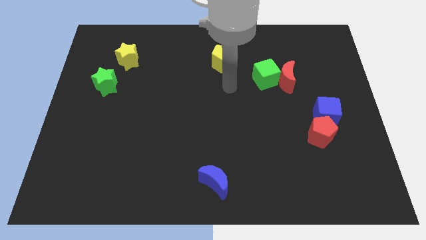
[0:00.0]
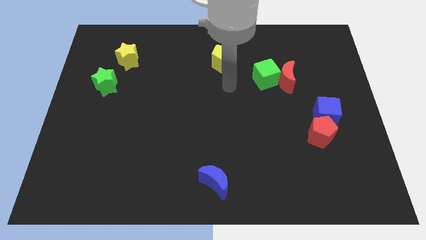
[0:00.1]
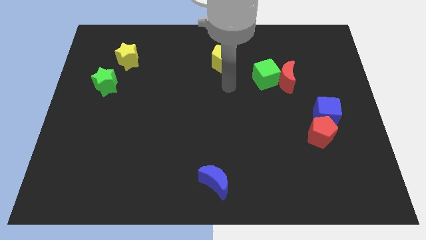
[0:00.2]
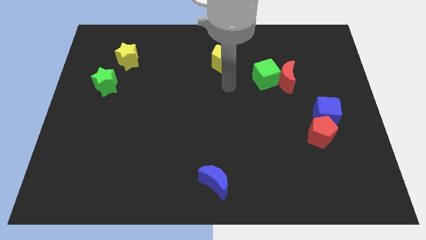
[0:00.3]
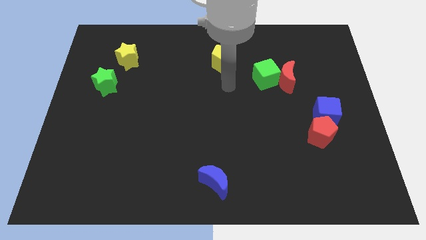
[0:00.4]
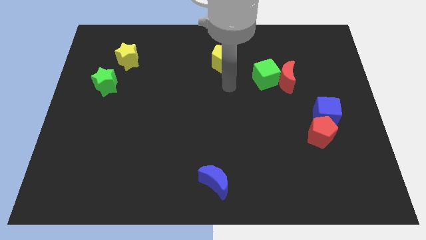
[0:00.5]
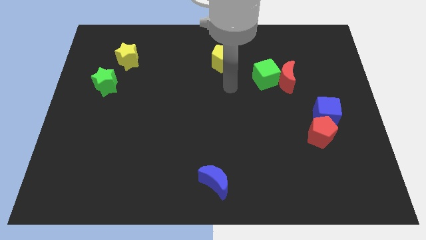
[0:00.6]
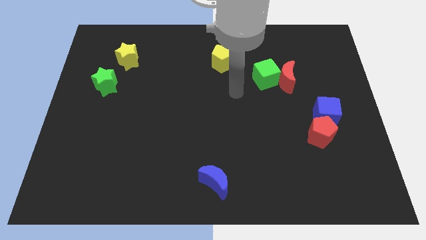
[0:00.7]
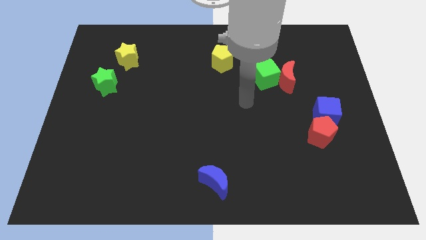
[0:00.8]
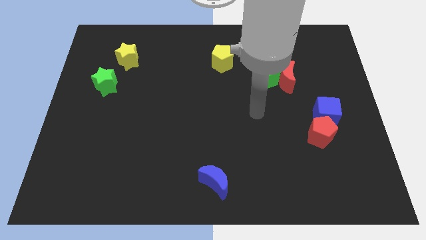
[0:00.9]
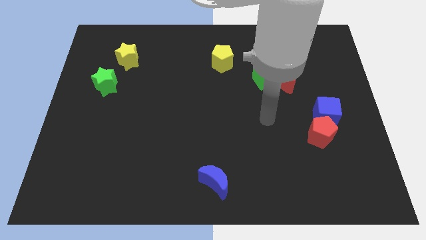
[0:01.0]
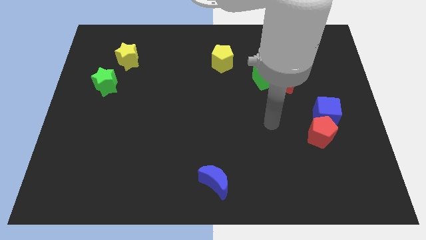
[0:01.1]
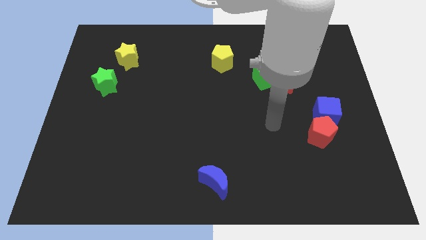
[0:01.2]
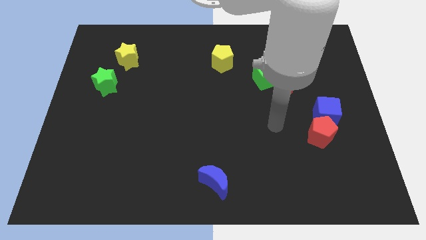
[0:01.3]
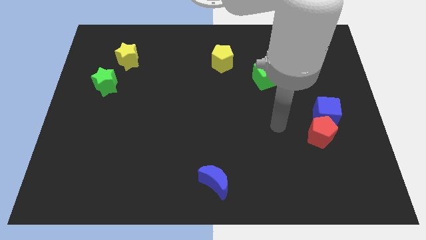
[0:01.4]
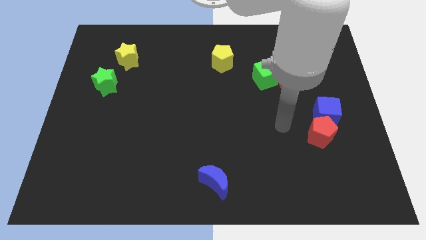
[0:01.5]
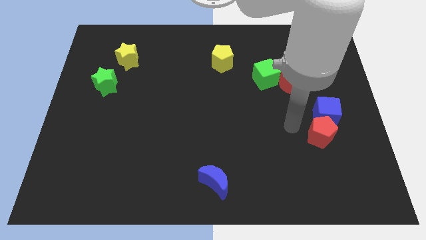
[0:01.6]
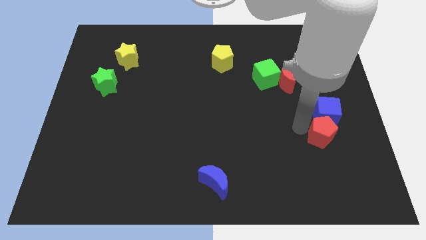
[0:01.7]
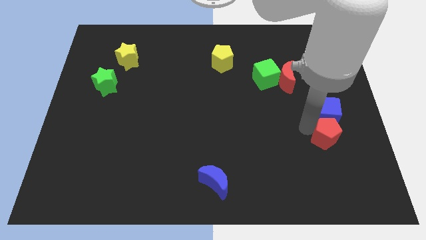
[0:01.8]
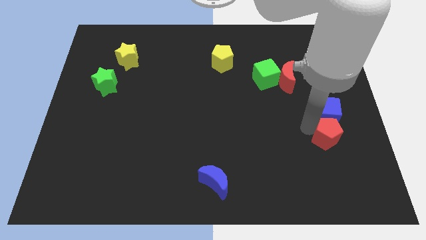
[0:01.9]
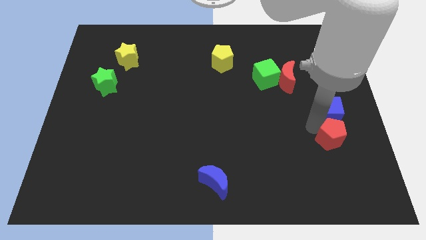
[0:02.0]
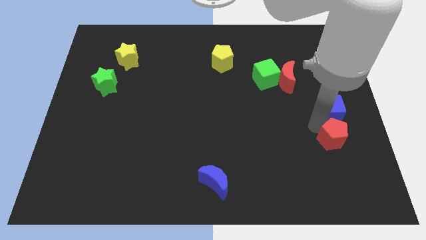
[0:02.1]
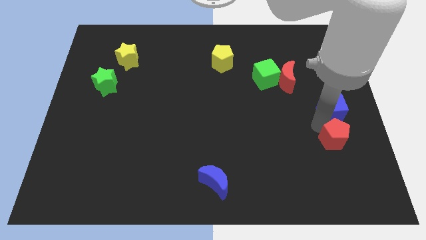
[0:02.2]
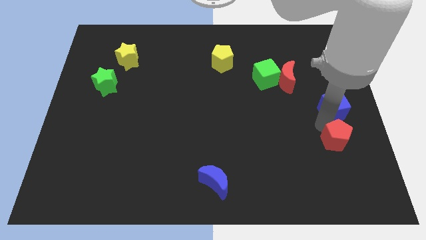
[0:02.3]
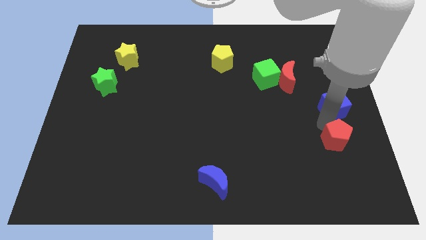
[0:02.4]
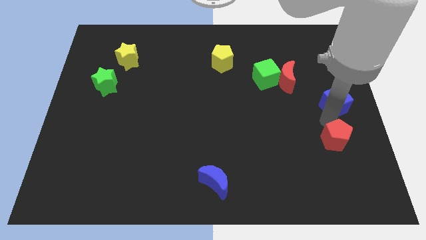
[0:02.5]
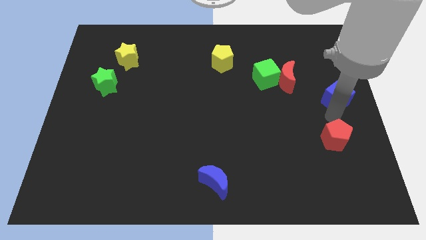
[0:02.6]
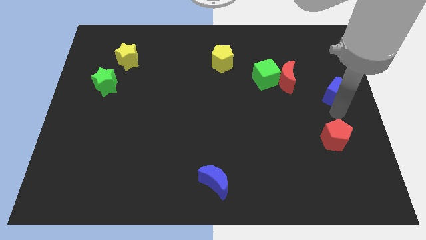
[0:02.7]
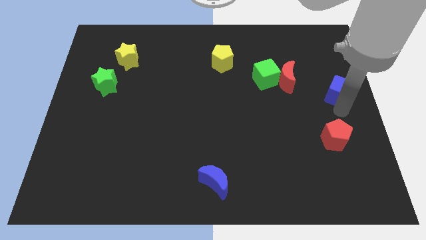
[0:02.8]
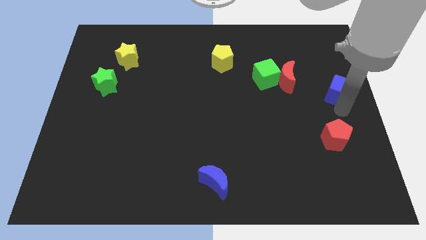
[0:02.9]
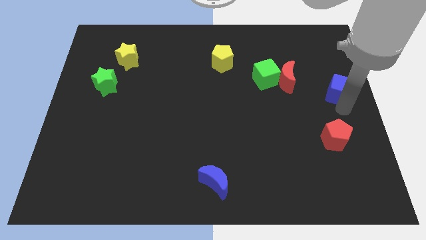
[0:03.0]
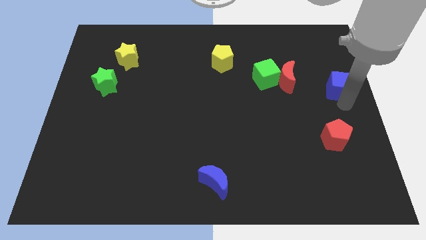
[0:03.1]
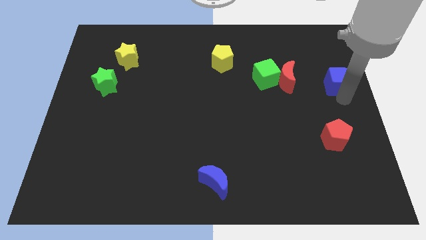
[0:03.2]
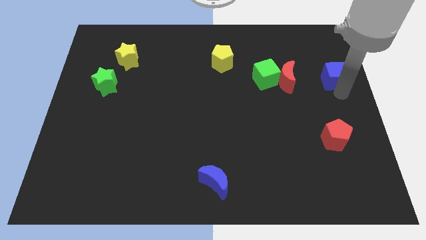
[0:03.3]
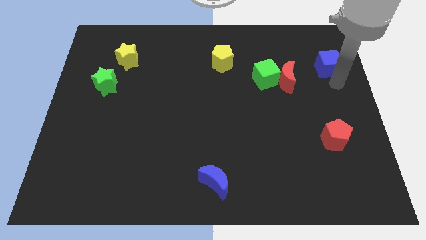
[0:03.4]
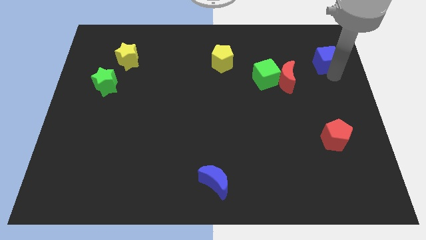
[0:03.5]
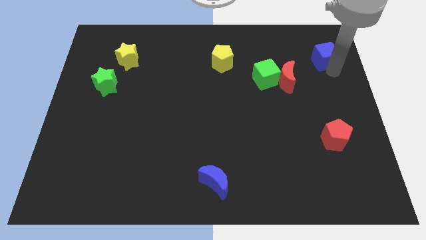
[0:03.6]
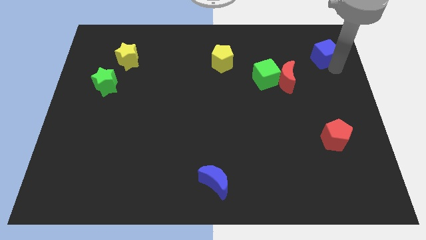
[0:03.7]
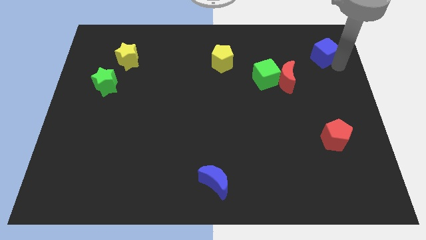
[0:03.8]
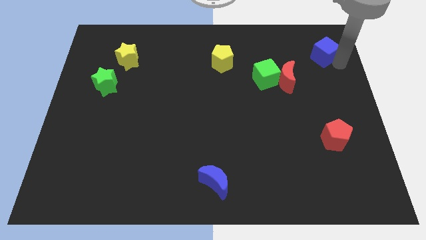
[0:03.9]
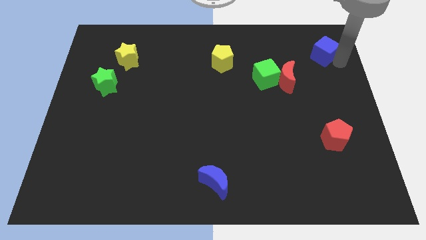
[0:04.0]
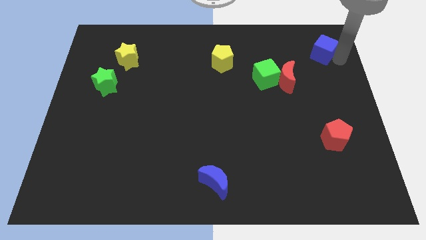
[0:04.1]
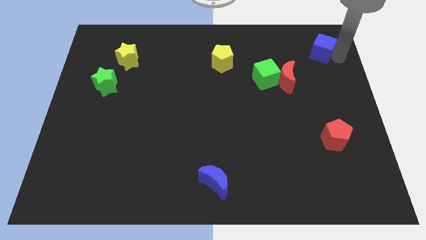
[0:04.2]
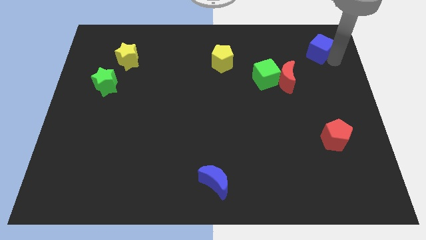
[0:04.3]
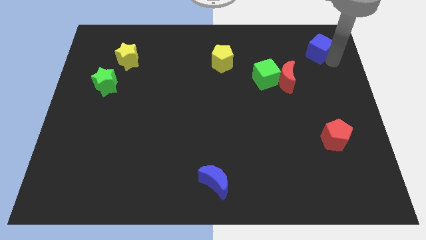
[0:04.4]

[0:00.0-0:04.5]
separate the blue cube from the red pentagon

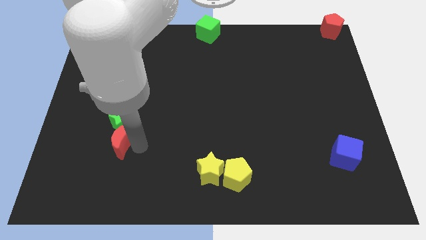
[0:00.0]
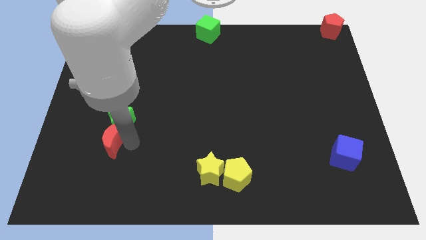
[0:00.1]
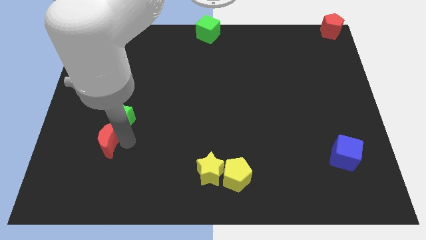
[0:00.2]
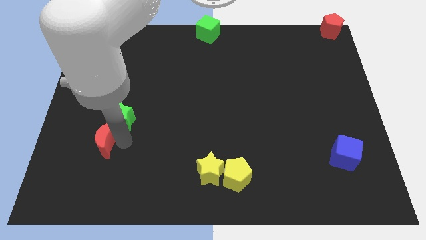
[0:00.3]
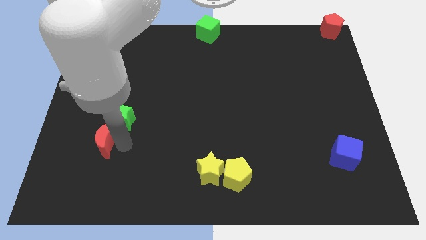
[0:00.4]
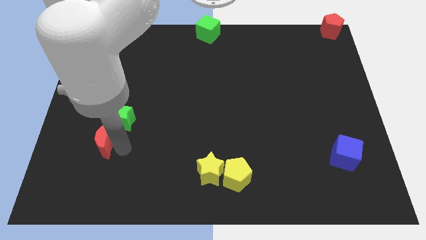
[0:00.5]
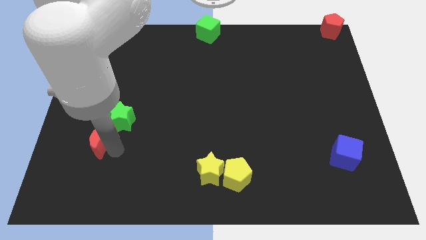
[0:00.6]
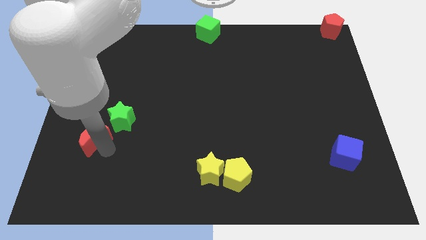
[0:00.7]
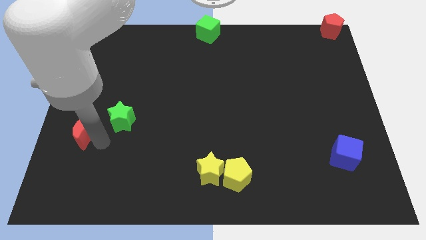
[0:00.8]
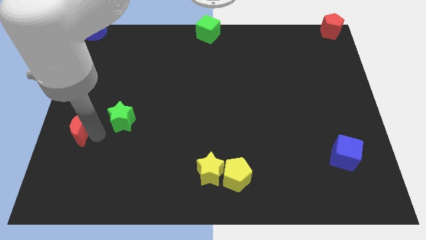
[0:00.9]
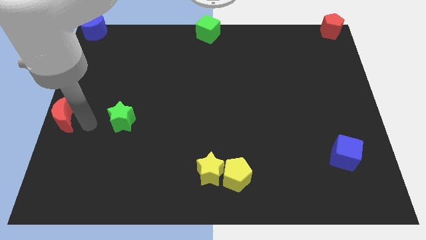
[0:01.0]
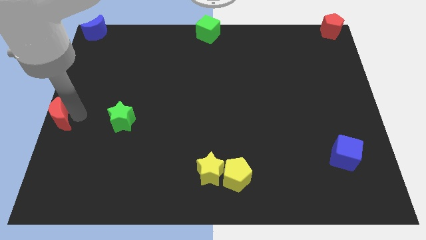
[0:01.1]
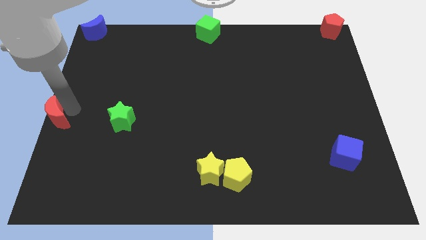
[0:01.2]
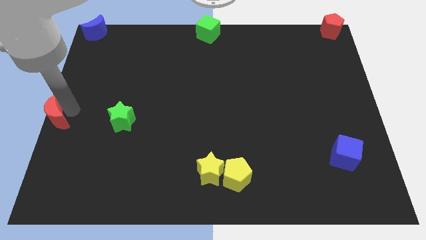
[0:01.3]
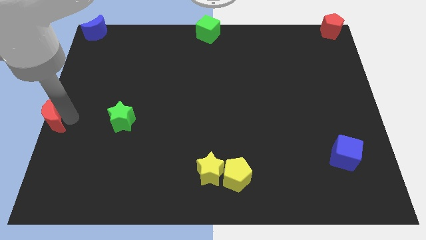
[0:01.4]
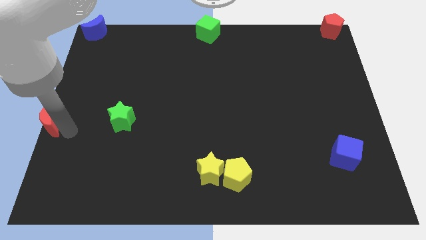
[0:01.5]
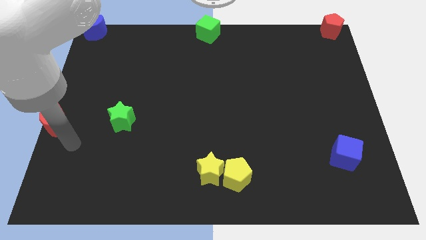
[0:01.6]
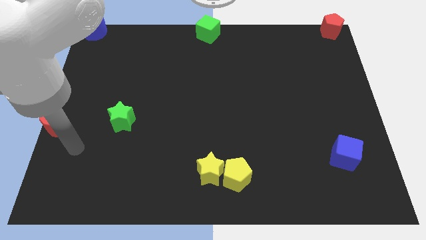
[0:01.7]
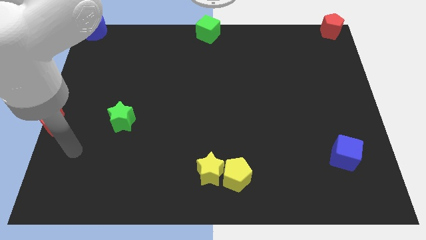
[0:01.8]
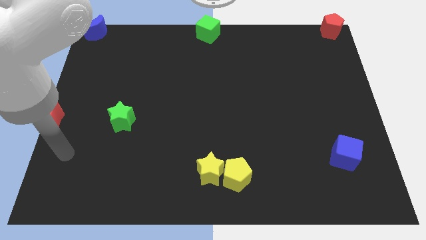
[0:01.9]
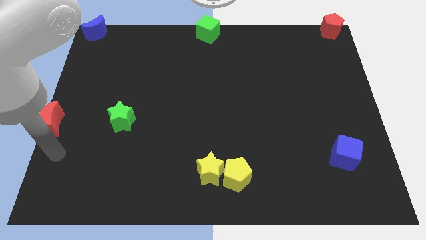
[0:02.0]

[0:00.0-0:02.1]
move the red moon parallel to the green star

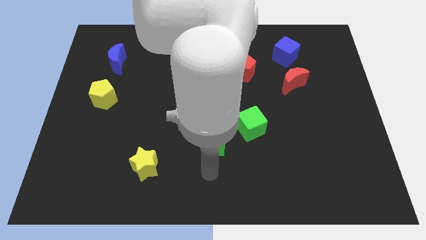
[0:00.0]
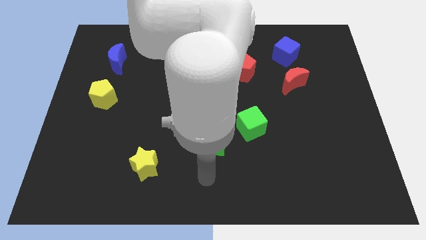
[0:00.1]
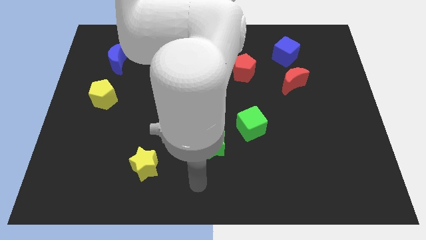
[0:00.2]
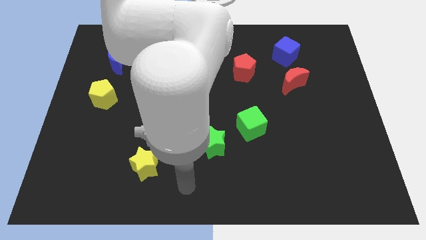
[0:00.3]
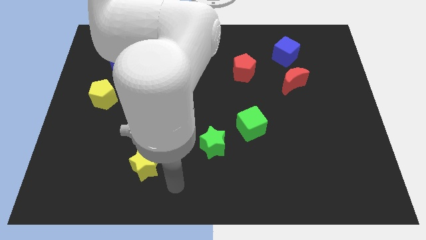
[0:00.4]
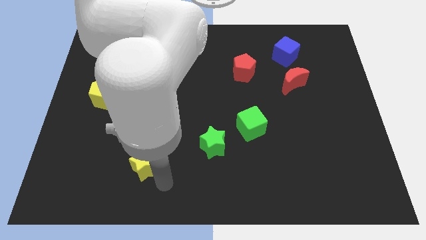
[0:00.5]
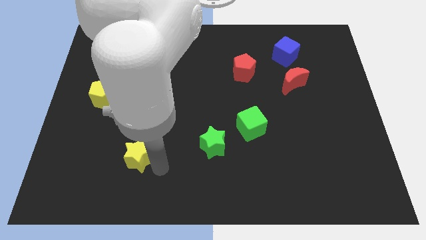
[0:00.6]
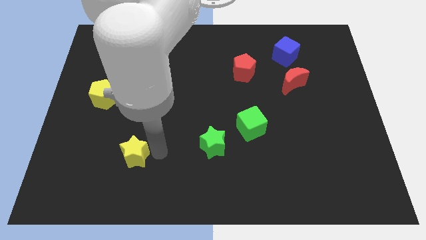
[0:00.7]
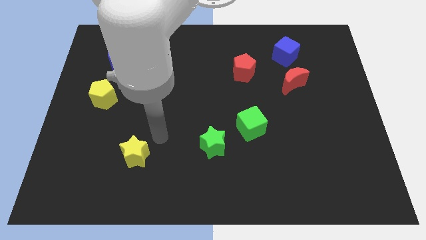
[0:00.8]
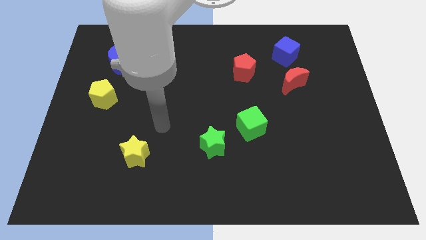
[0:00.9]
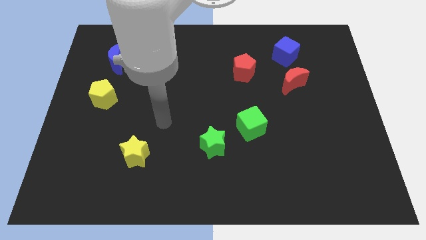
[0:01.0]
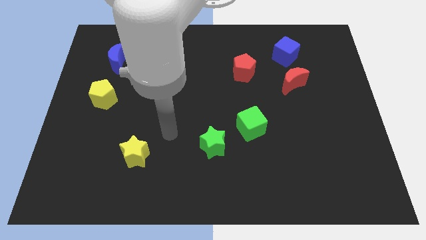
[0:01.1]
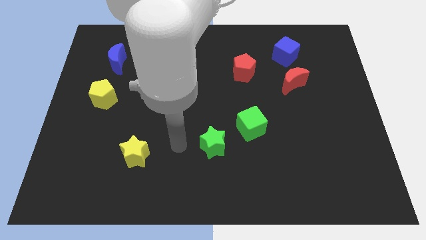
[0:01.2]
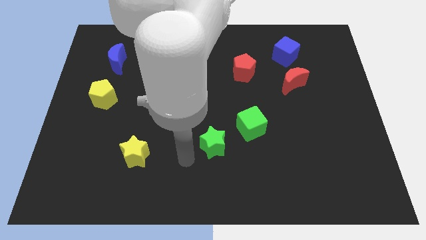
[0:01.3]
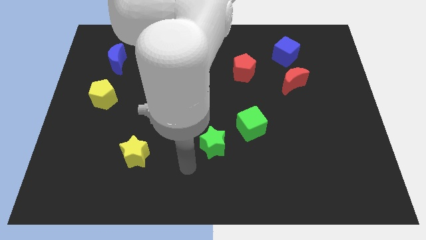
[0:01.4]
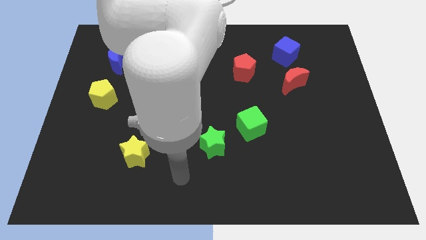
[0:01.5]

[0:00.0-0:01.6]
push the yellow star slightly to the top left side of the board

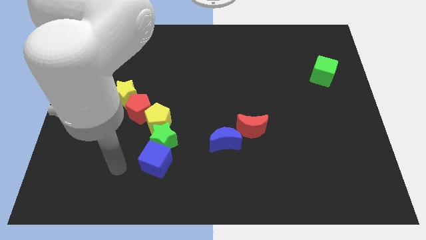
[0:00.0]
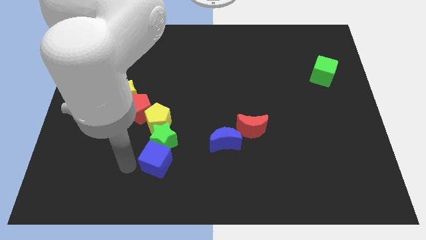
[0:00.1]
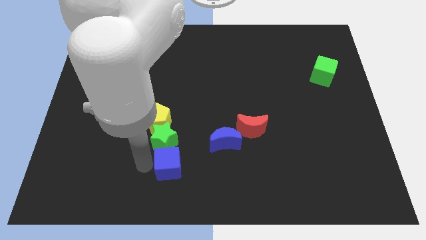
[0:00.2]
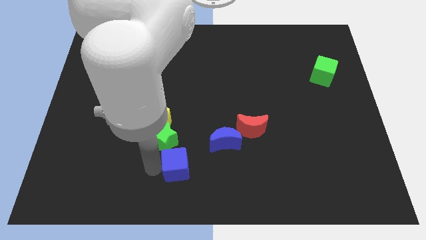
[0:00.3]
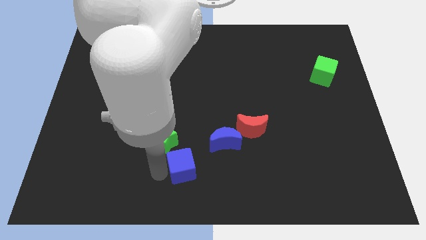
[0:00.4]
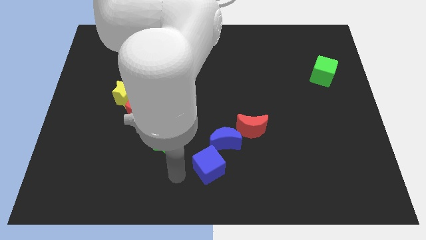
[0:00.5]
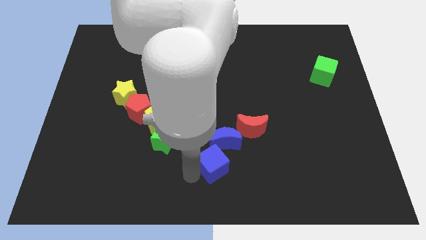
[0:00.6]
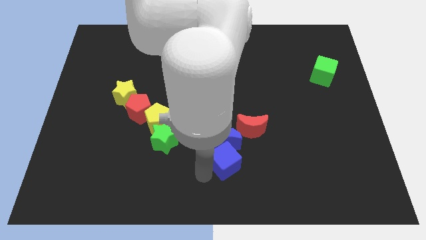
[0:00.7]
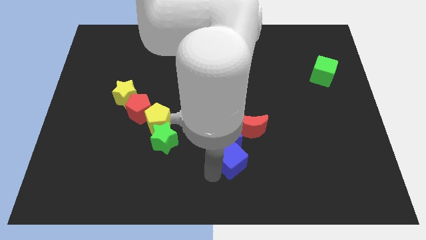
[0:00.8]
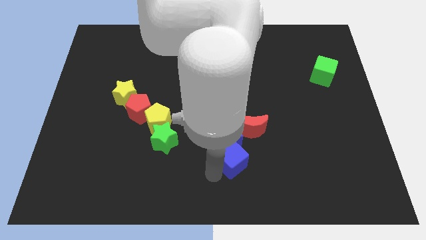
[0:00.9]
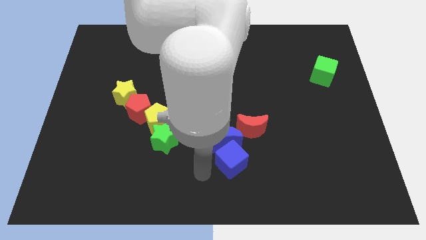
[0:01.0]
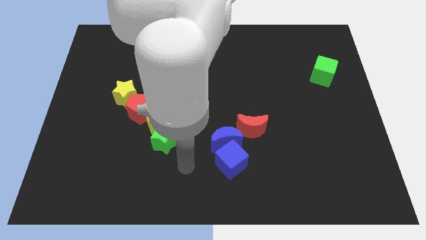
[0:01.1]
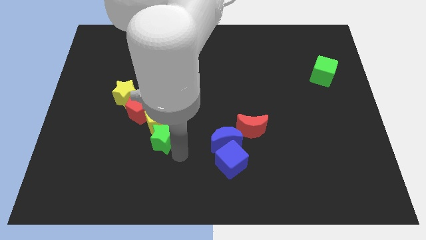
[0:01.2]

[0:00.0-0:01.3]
move the blue cube into the blue crescent
